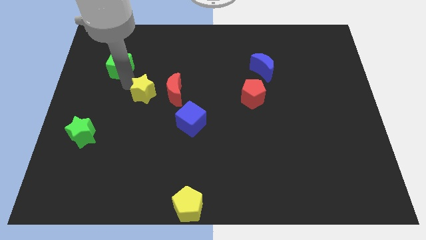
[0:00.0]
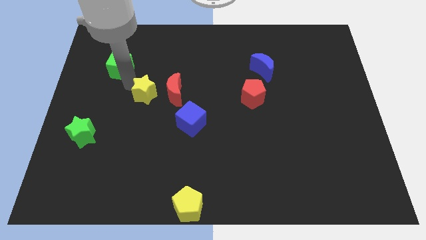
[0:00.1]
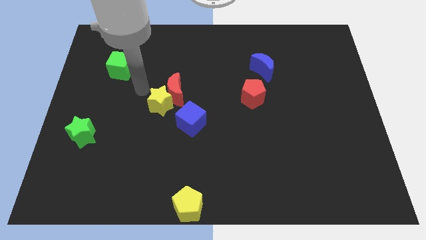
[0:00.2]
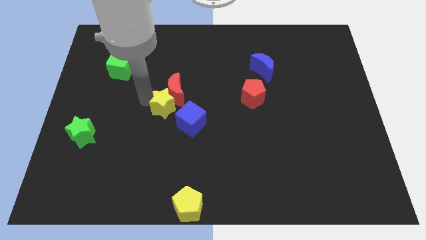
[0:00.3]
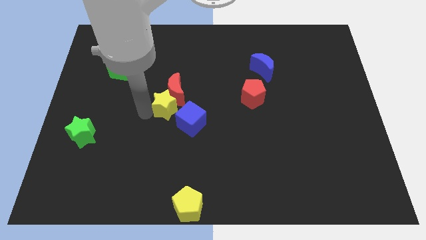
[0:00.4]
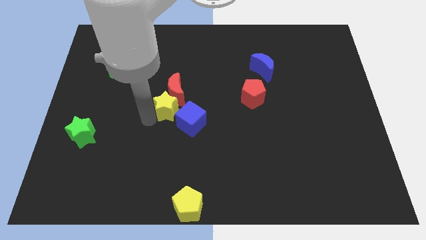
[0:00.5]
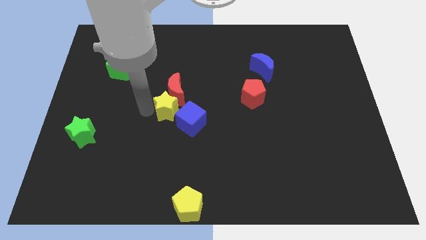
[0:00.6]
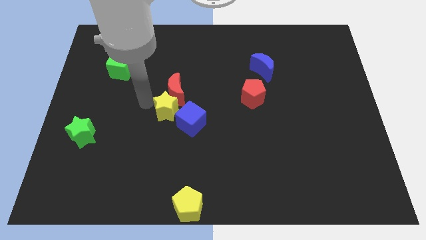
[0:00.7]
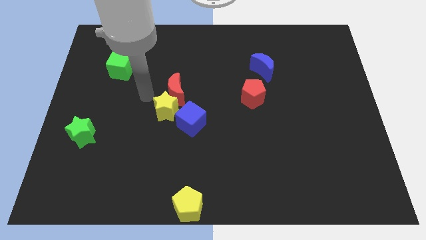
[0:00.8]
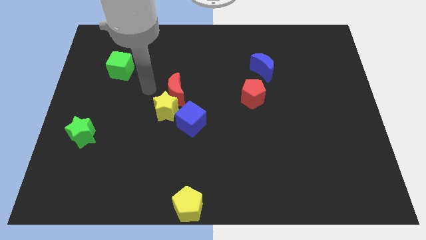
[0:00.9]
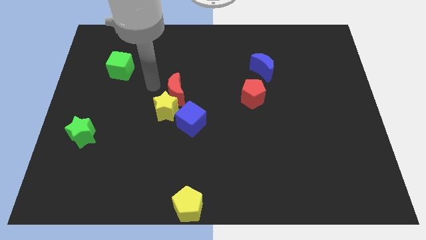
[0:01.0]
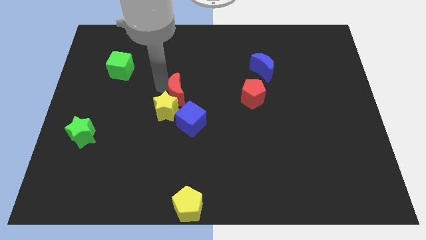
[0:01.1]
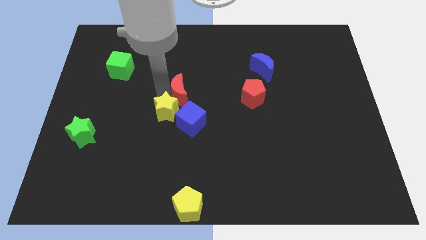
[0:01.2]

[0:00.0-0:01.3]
push the yellow star into the red moon

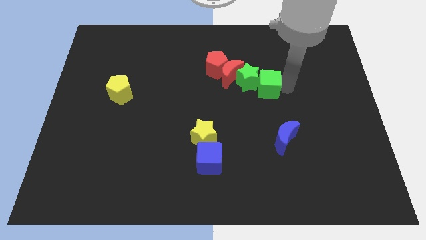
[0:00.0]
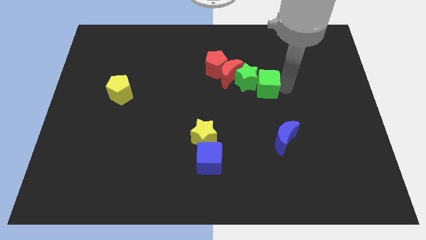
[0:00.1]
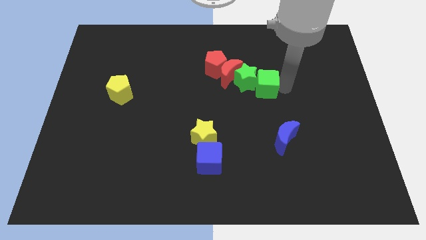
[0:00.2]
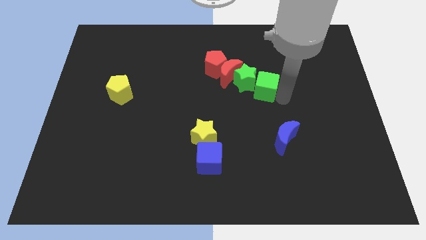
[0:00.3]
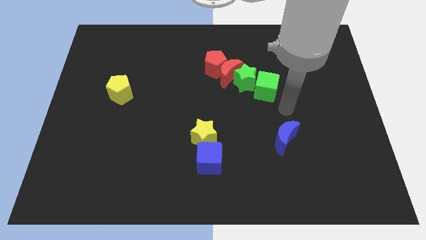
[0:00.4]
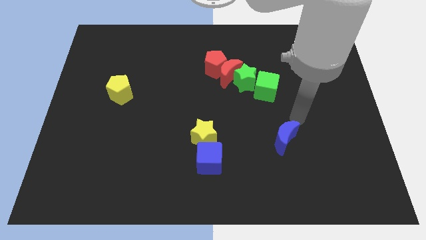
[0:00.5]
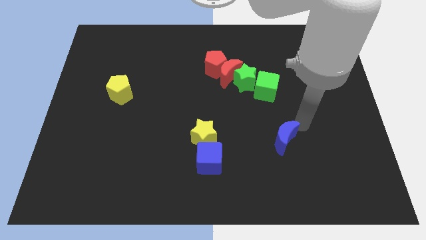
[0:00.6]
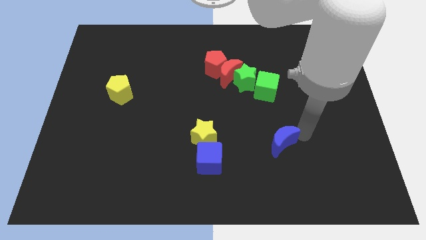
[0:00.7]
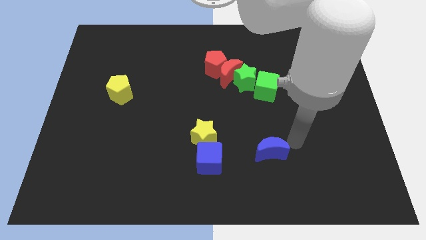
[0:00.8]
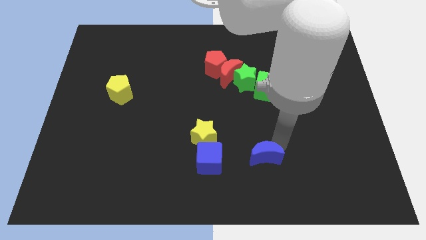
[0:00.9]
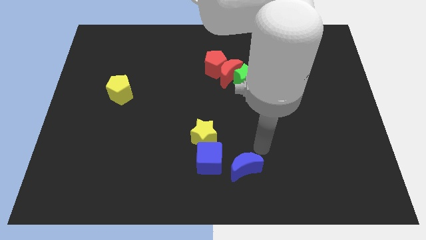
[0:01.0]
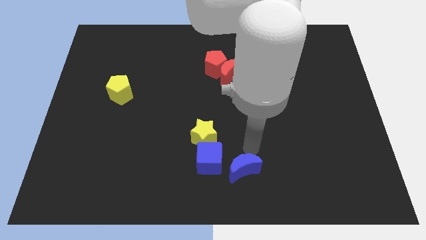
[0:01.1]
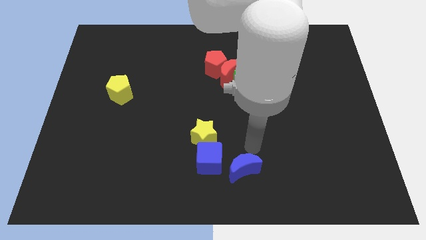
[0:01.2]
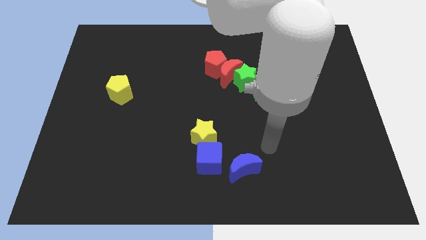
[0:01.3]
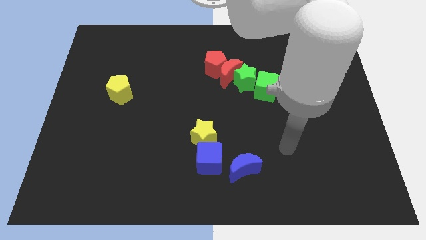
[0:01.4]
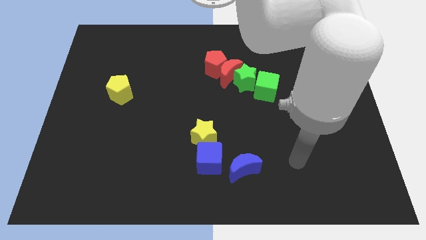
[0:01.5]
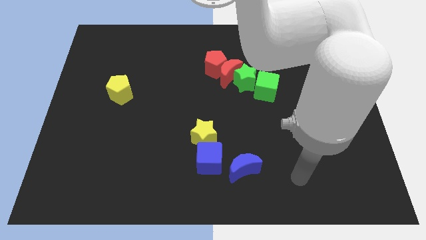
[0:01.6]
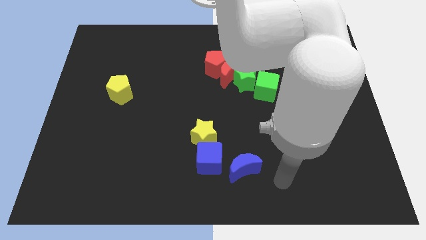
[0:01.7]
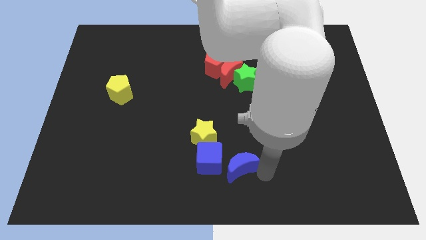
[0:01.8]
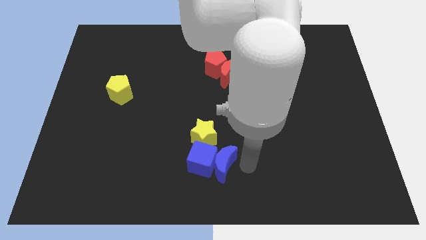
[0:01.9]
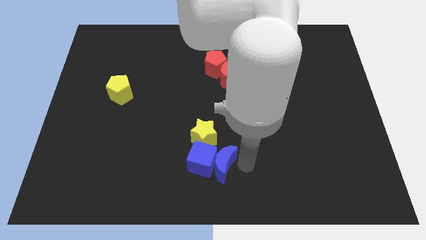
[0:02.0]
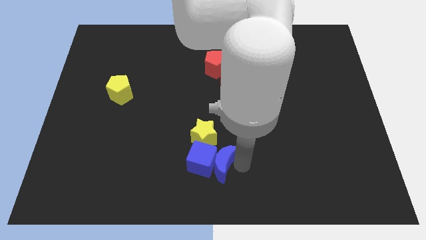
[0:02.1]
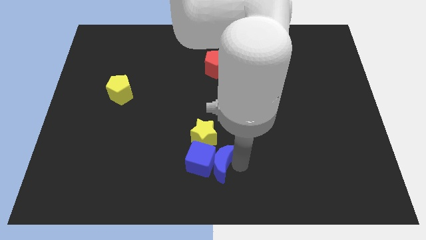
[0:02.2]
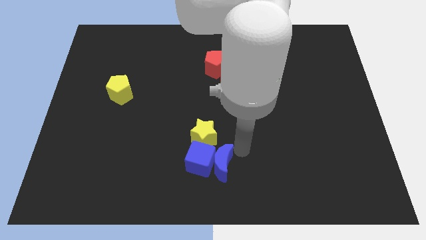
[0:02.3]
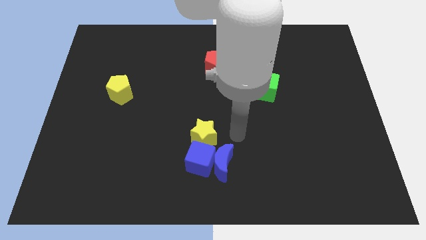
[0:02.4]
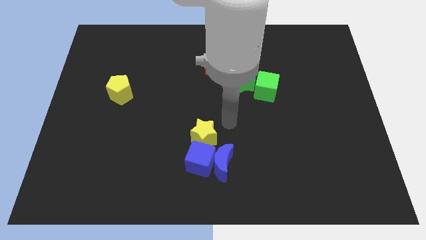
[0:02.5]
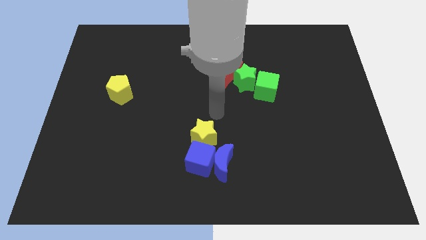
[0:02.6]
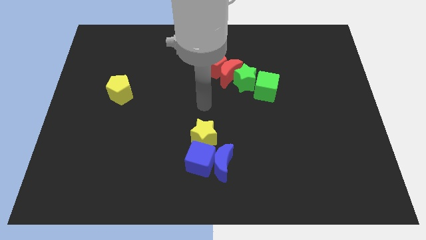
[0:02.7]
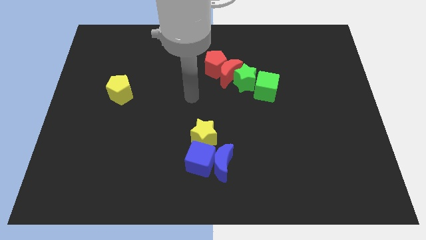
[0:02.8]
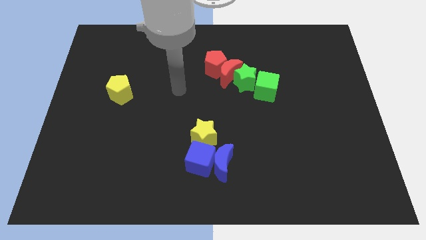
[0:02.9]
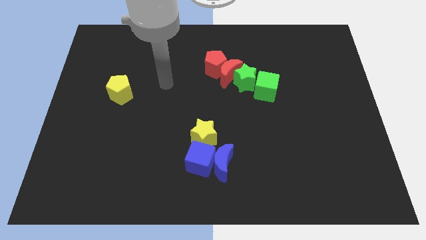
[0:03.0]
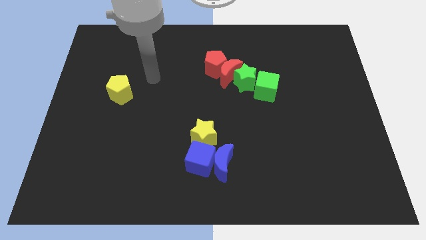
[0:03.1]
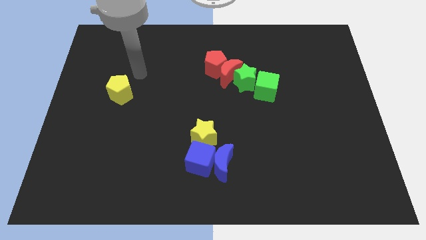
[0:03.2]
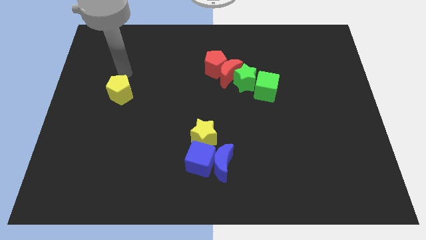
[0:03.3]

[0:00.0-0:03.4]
move the blue crescent to the right of the blue cube

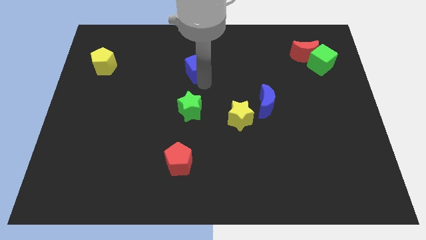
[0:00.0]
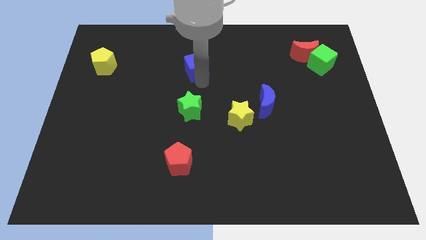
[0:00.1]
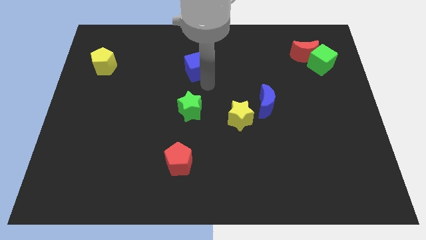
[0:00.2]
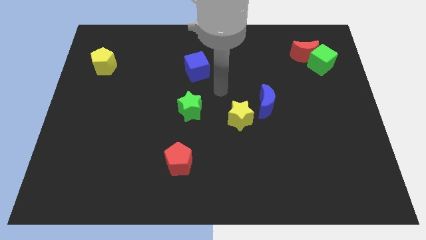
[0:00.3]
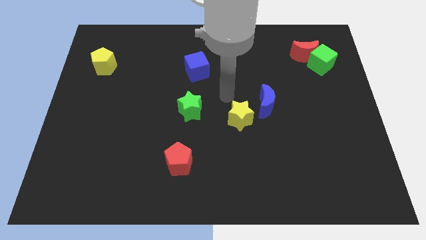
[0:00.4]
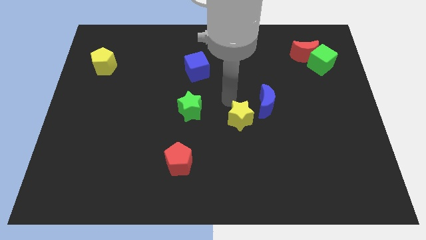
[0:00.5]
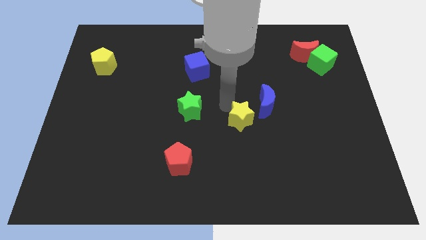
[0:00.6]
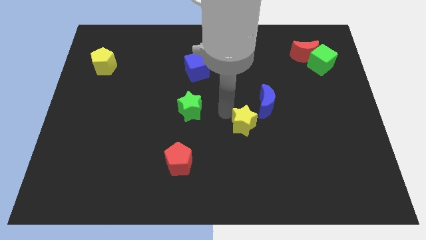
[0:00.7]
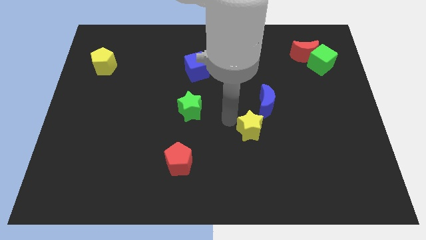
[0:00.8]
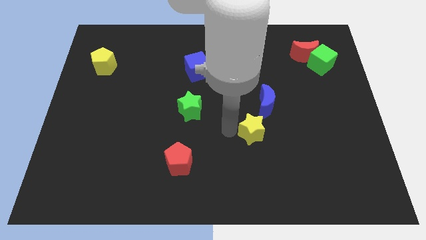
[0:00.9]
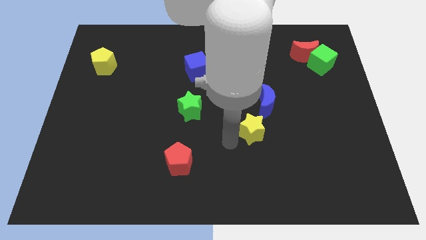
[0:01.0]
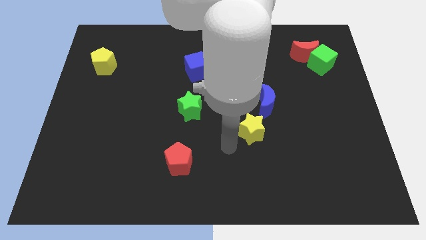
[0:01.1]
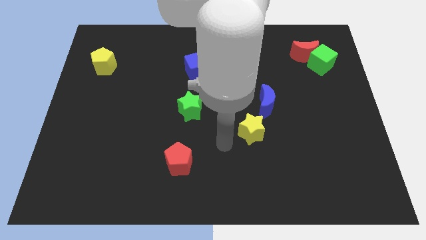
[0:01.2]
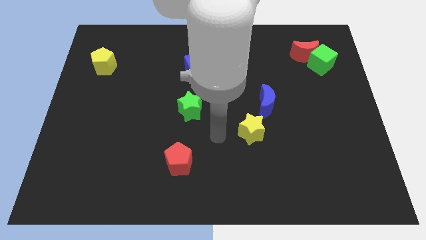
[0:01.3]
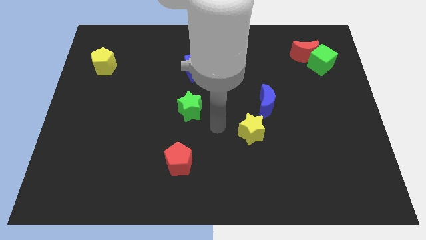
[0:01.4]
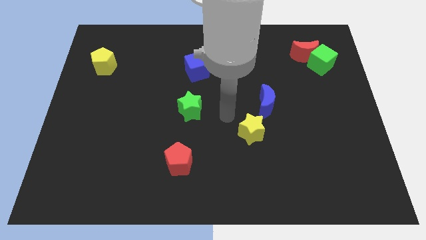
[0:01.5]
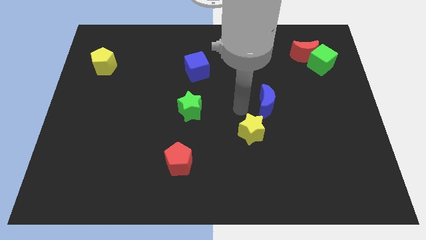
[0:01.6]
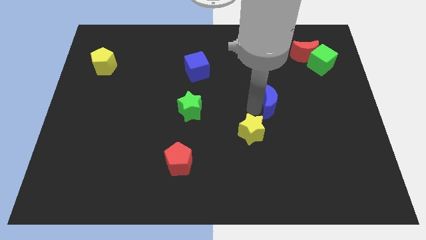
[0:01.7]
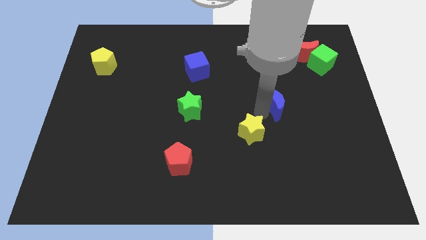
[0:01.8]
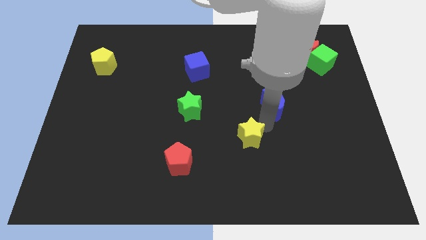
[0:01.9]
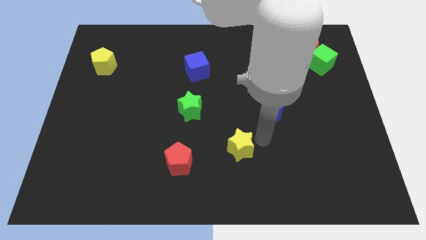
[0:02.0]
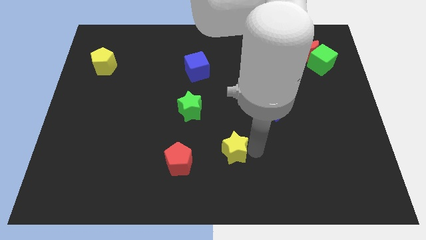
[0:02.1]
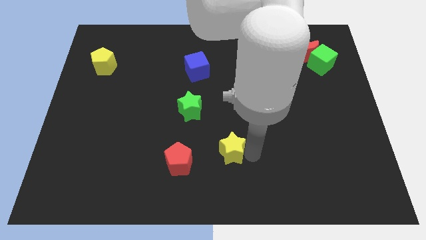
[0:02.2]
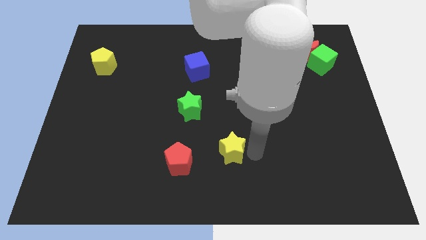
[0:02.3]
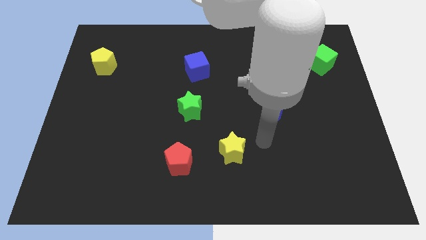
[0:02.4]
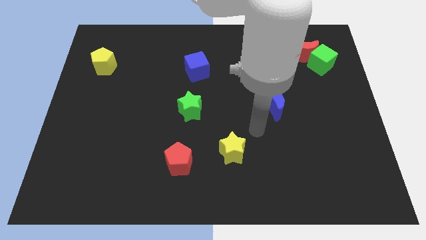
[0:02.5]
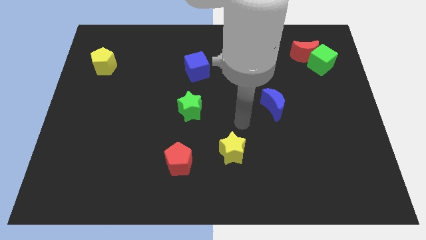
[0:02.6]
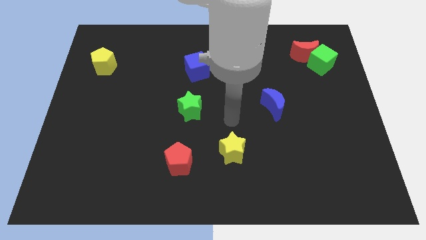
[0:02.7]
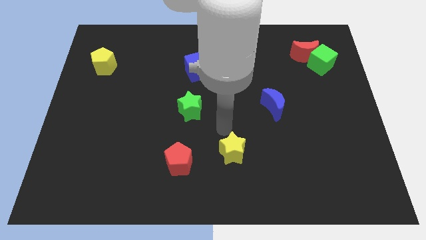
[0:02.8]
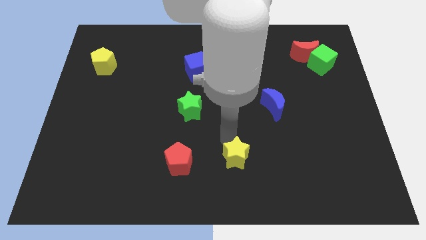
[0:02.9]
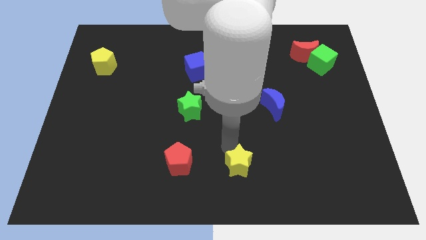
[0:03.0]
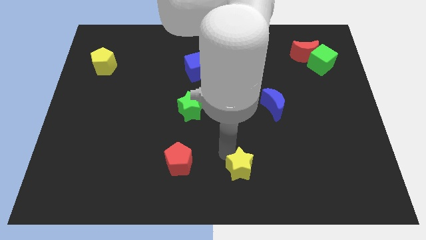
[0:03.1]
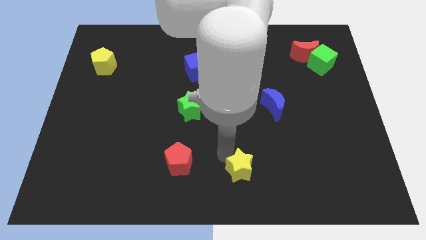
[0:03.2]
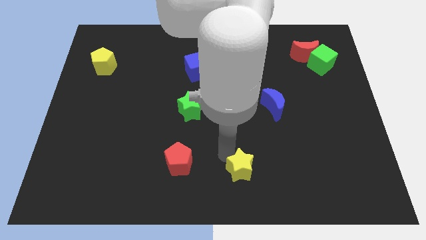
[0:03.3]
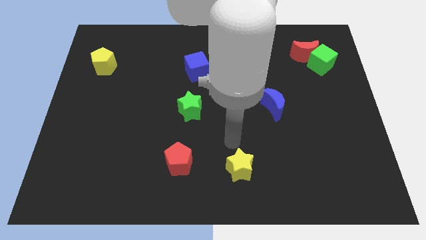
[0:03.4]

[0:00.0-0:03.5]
move the blue moon slightly to the right of the green star

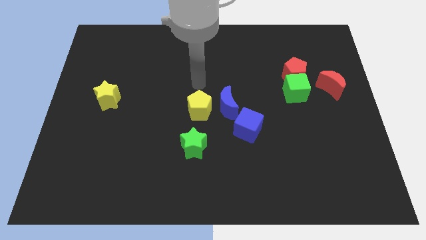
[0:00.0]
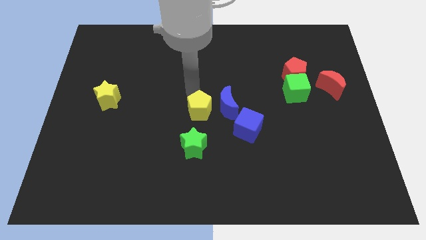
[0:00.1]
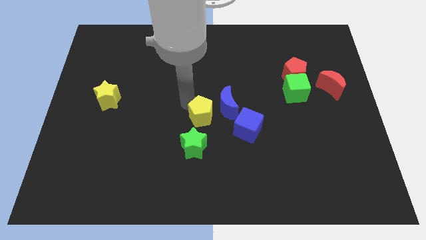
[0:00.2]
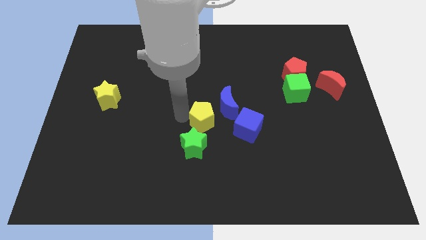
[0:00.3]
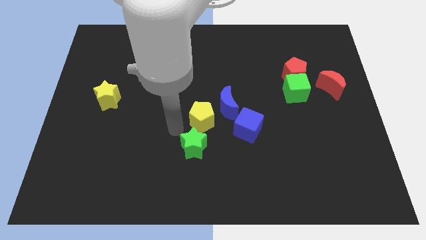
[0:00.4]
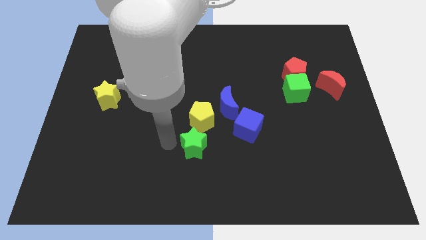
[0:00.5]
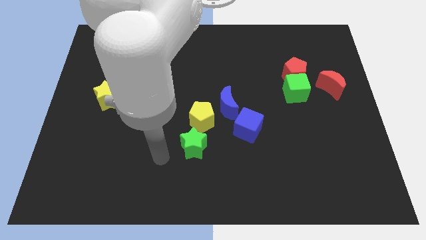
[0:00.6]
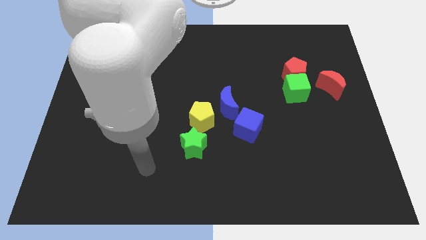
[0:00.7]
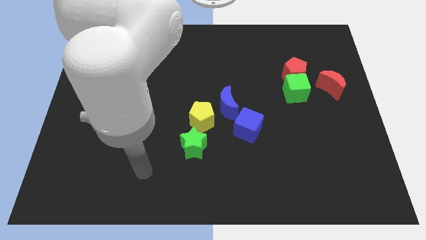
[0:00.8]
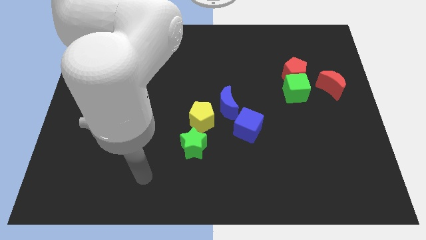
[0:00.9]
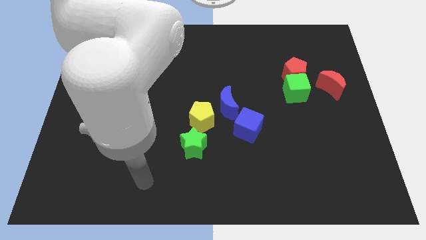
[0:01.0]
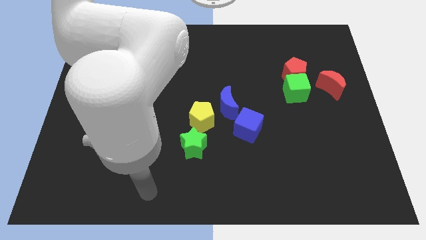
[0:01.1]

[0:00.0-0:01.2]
move the yellow pentagon slightly to the bottom
